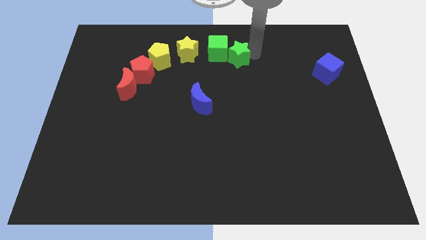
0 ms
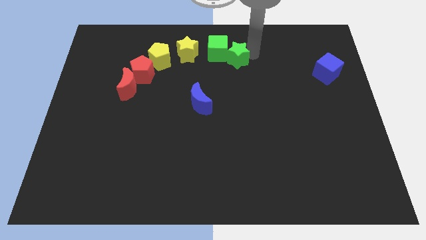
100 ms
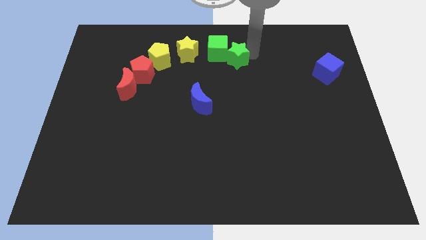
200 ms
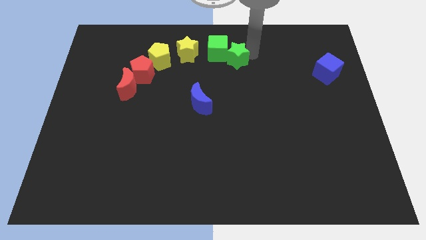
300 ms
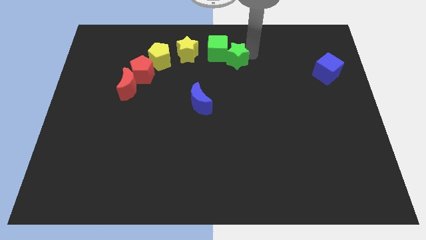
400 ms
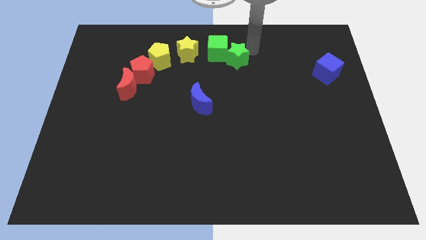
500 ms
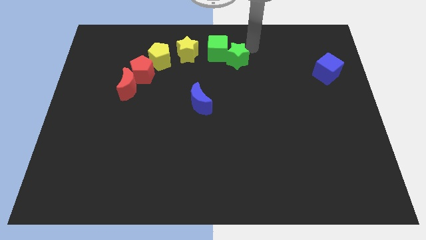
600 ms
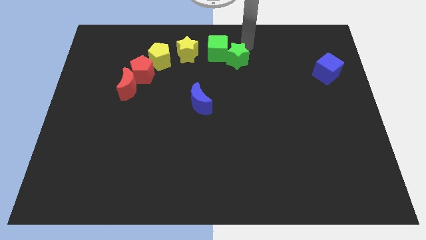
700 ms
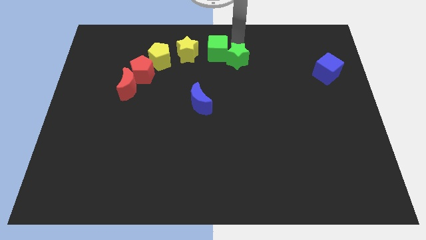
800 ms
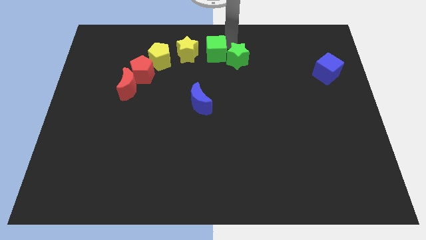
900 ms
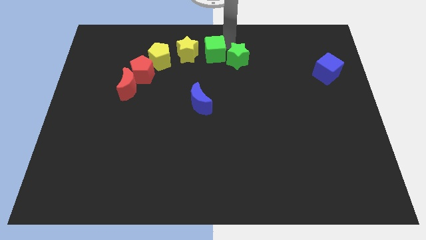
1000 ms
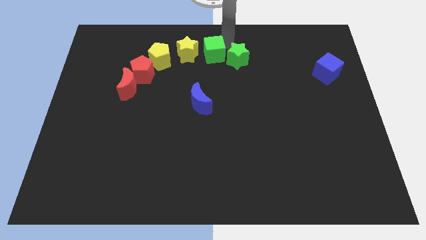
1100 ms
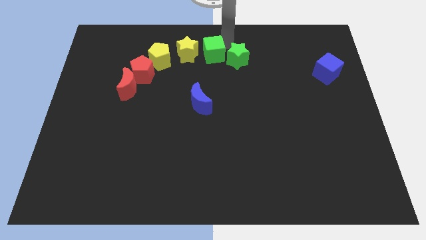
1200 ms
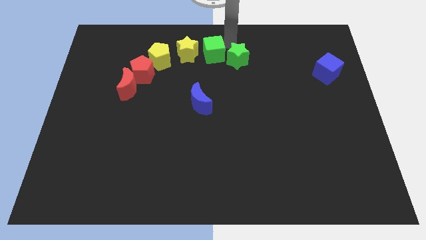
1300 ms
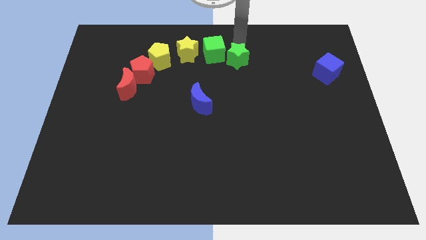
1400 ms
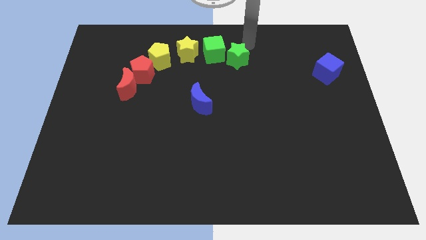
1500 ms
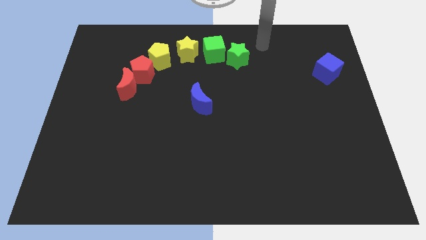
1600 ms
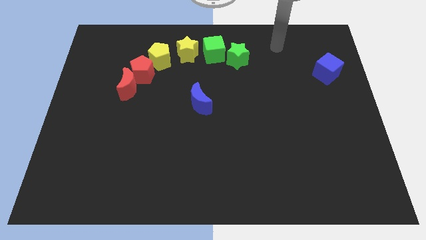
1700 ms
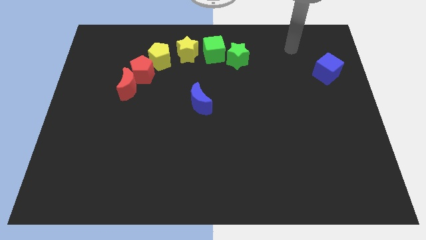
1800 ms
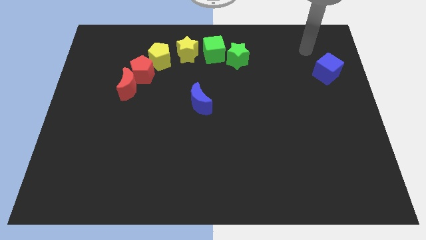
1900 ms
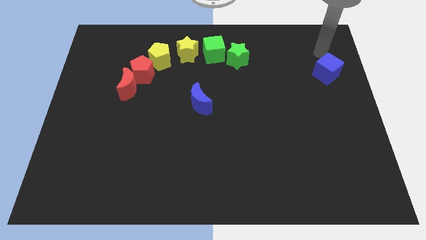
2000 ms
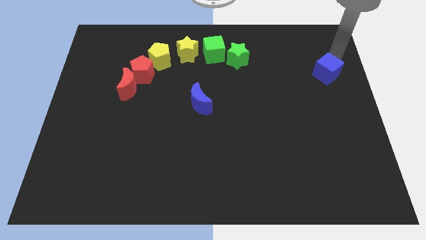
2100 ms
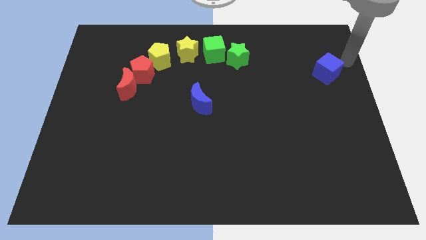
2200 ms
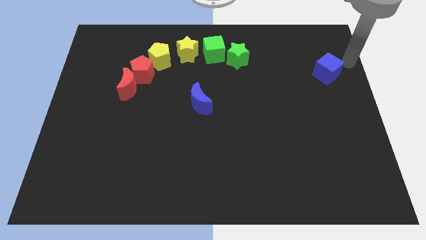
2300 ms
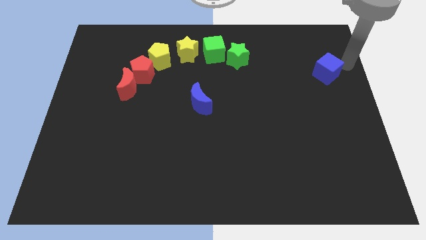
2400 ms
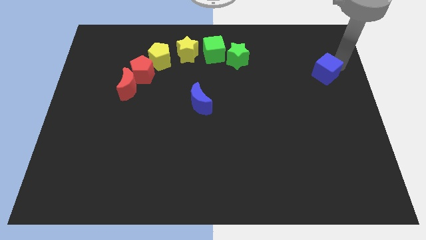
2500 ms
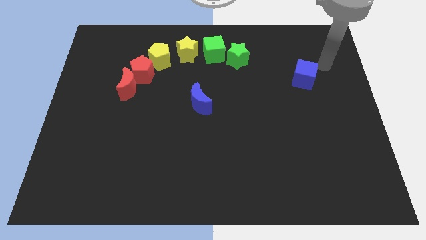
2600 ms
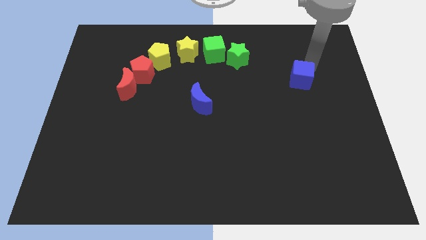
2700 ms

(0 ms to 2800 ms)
slightly move the blue cube to the left

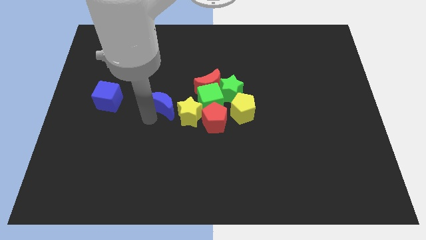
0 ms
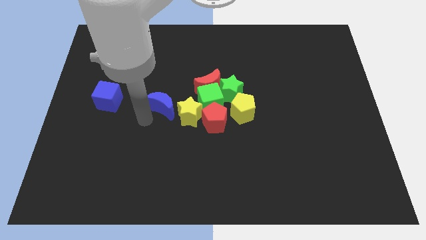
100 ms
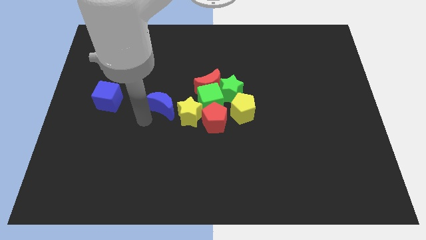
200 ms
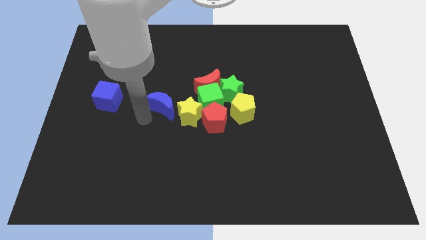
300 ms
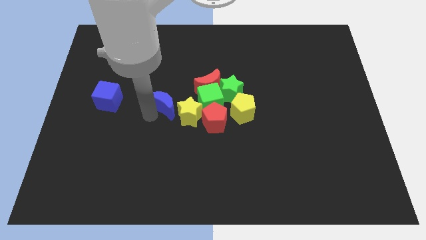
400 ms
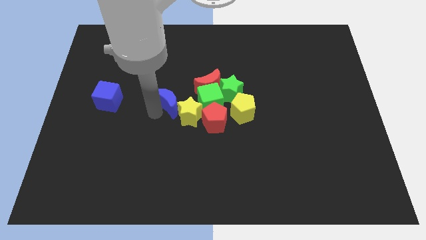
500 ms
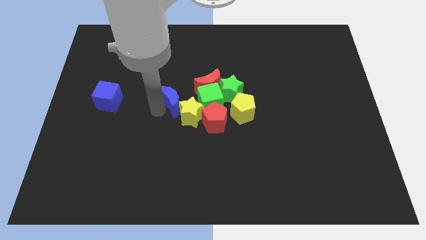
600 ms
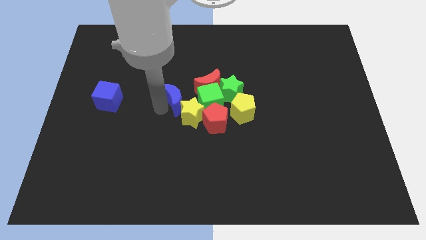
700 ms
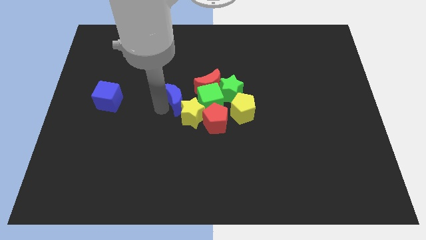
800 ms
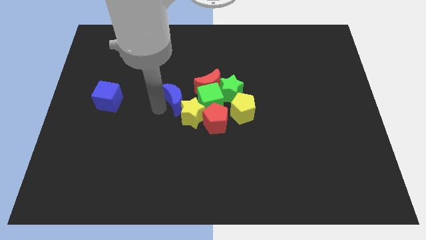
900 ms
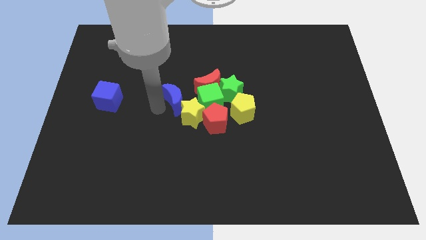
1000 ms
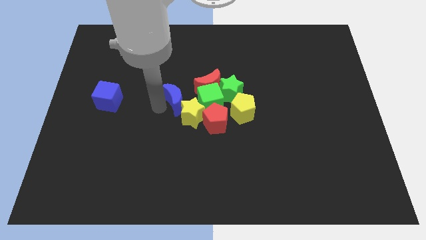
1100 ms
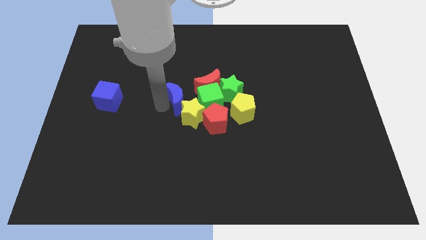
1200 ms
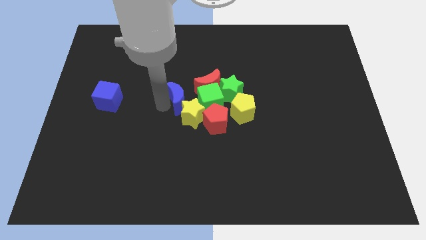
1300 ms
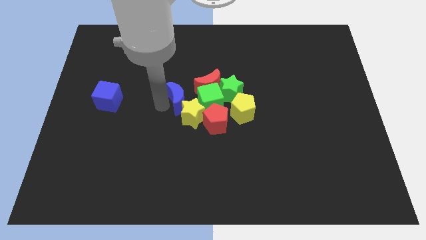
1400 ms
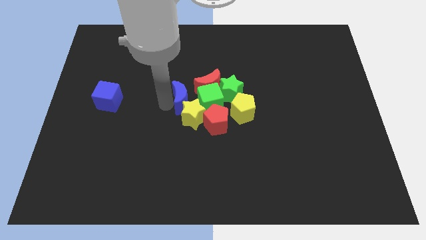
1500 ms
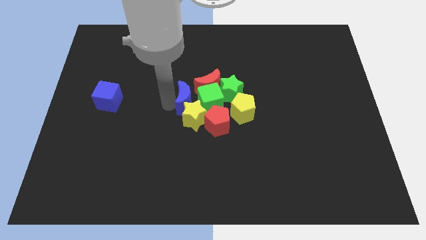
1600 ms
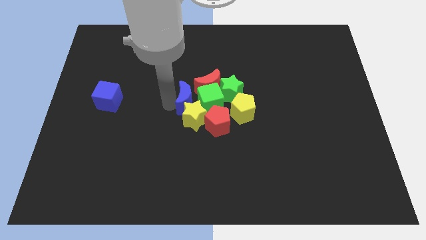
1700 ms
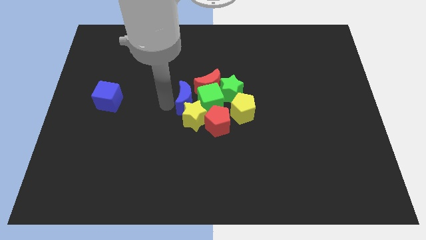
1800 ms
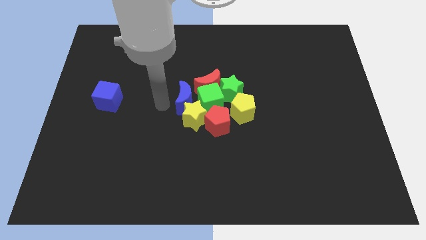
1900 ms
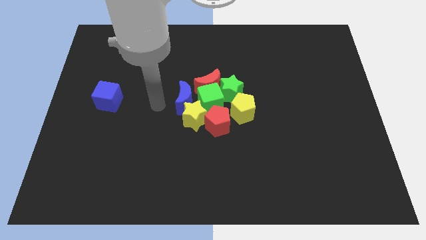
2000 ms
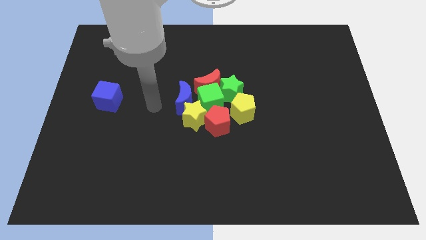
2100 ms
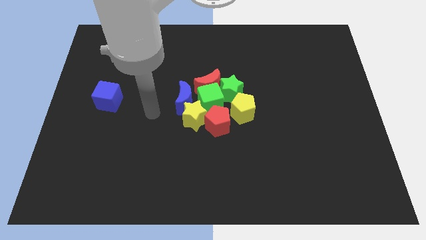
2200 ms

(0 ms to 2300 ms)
place the blue crescent top left of yellow star

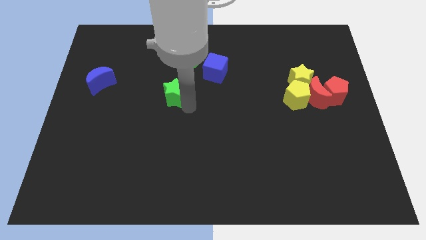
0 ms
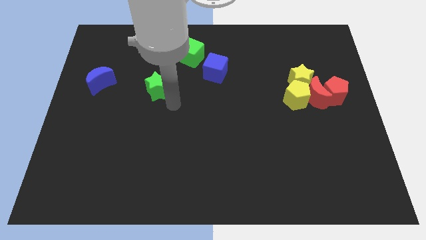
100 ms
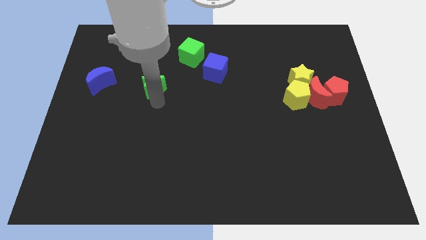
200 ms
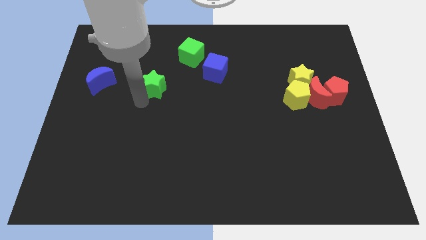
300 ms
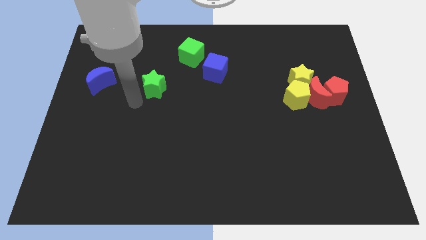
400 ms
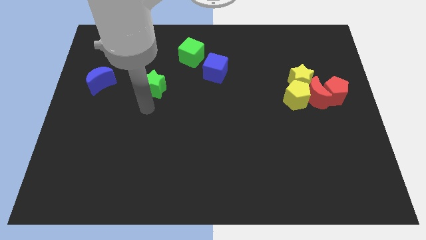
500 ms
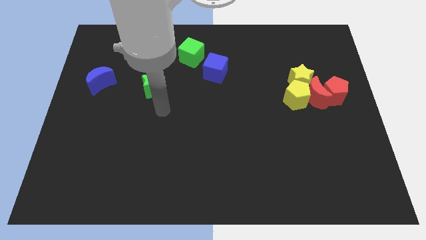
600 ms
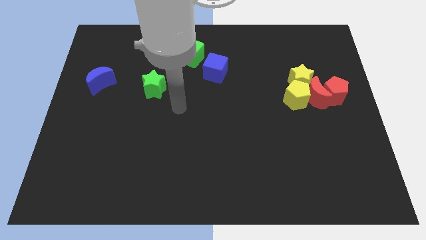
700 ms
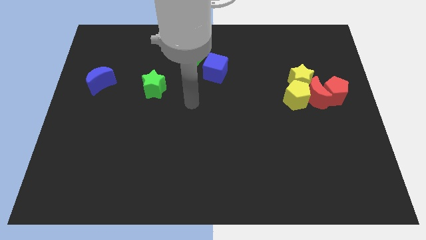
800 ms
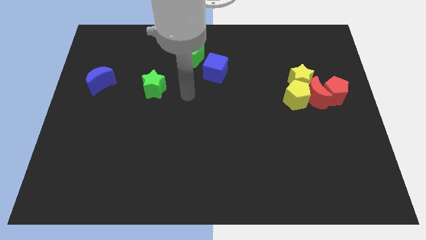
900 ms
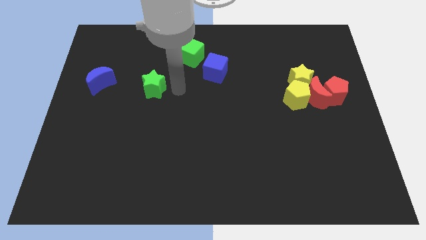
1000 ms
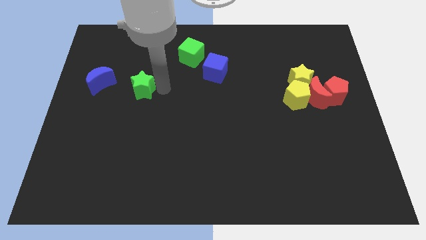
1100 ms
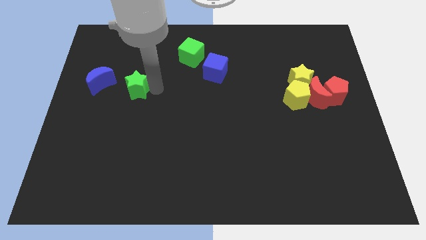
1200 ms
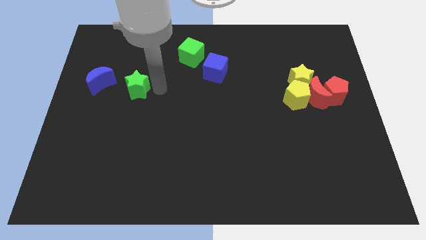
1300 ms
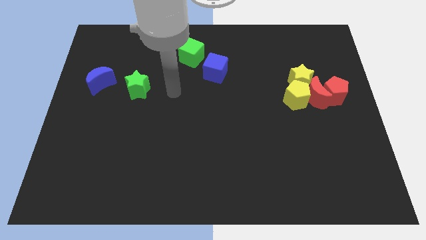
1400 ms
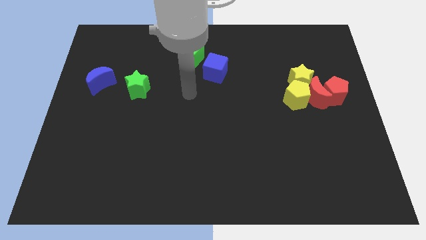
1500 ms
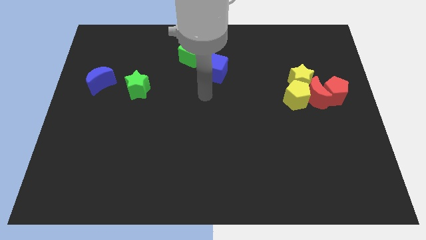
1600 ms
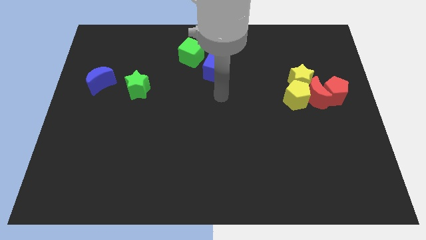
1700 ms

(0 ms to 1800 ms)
move the green star right beside the blue moon

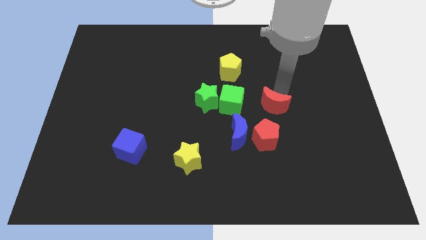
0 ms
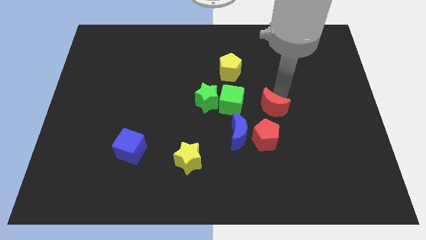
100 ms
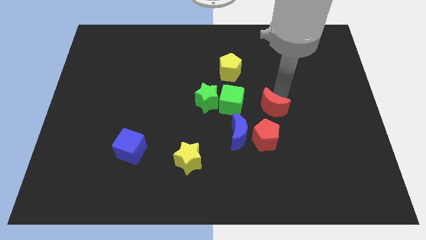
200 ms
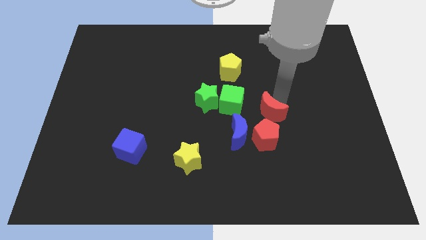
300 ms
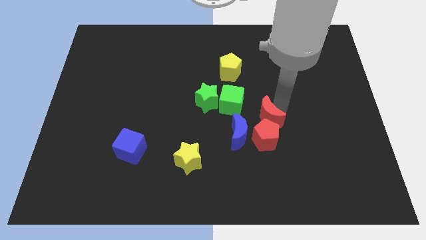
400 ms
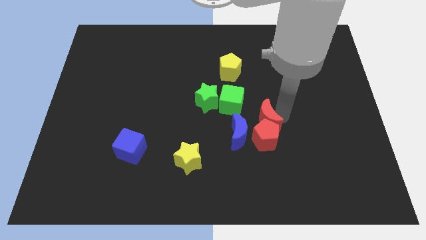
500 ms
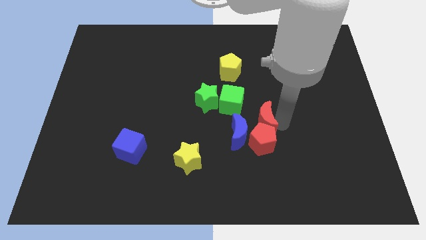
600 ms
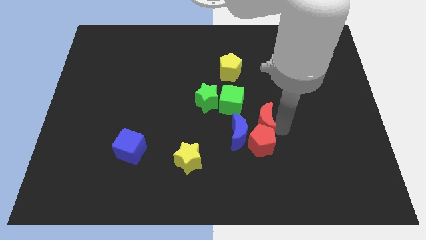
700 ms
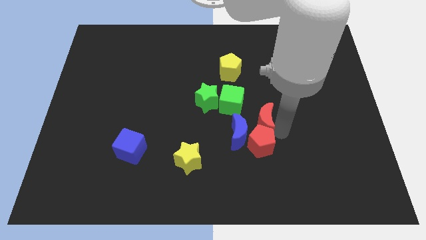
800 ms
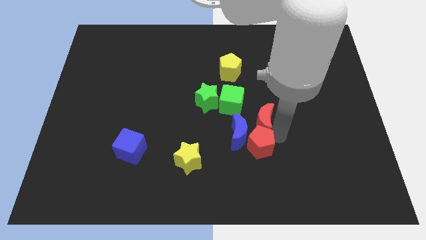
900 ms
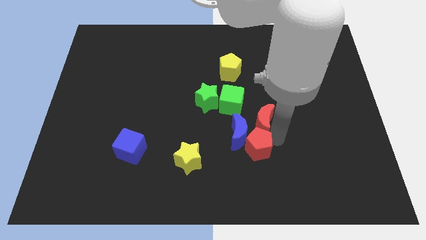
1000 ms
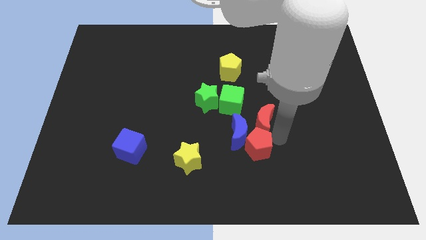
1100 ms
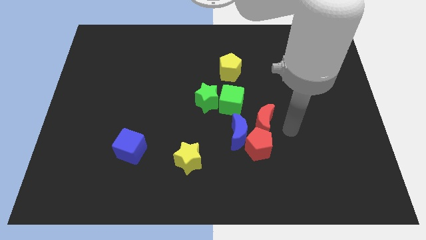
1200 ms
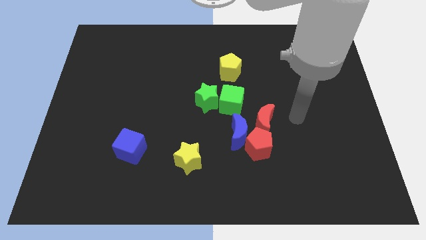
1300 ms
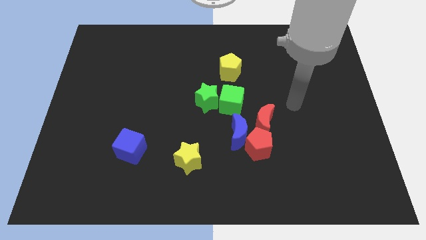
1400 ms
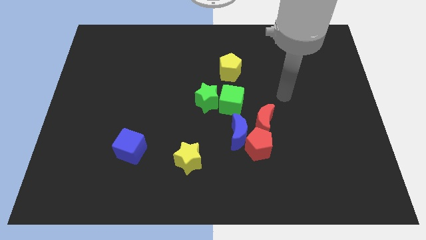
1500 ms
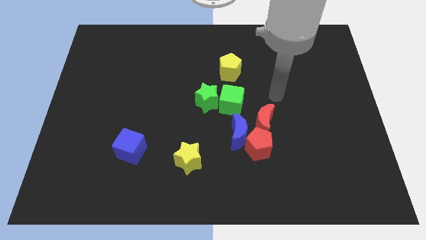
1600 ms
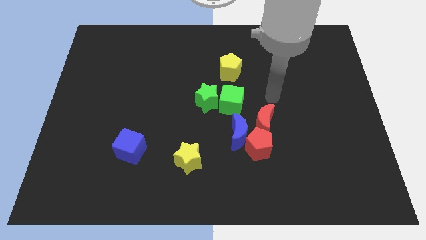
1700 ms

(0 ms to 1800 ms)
push the red crescent into the red pentagon

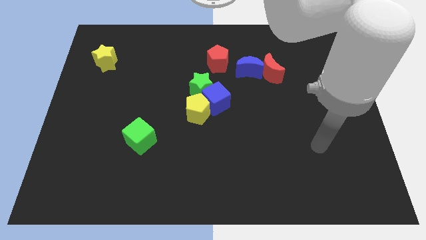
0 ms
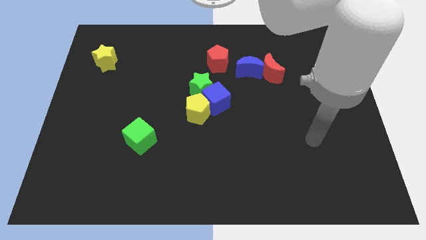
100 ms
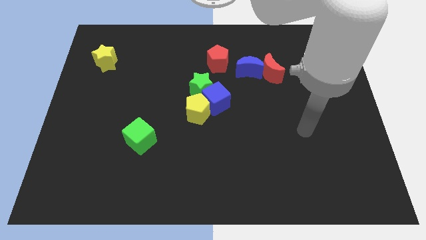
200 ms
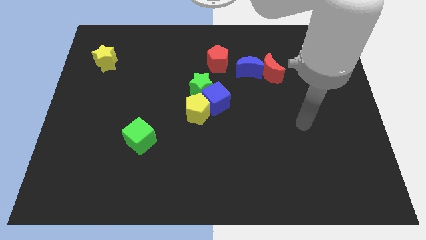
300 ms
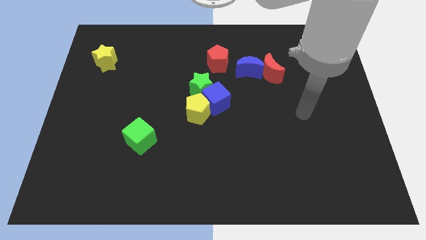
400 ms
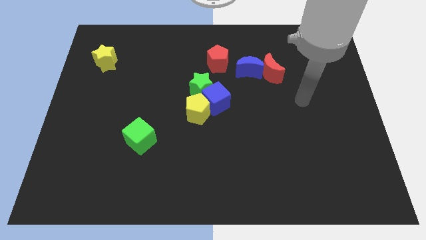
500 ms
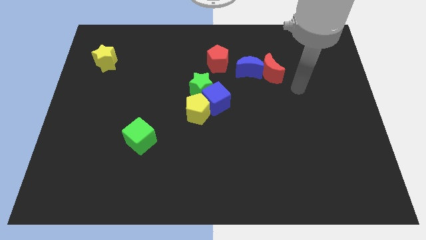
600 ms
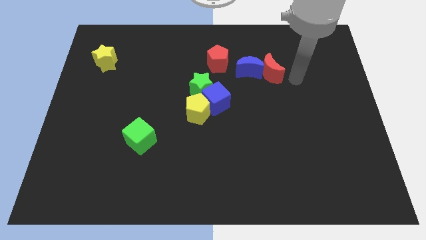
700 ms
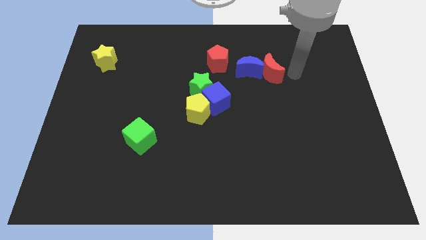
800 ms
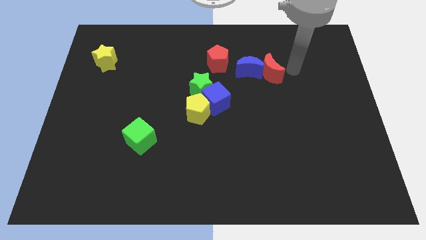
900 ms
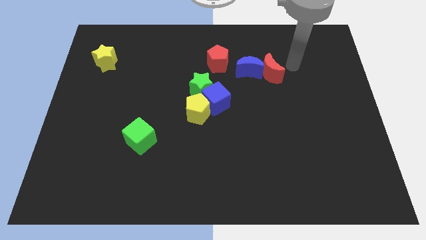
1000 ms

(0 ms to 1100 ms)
move your arm to the right of the red crescent
